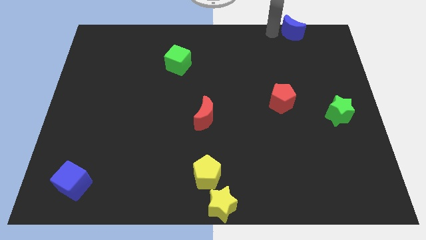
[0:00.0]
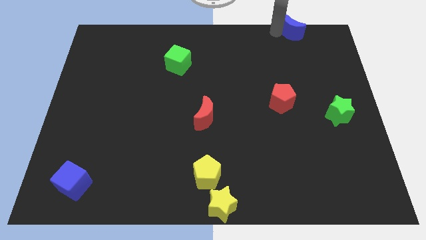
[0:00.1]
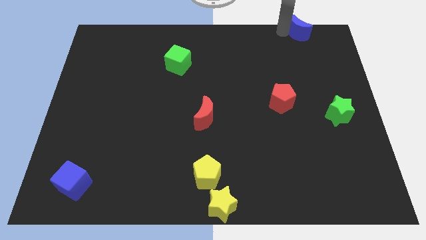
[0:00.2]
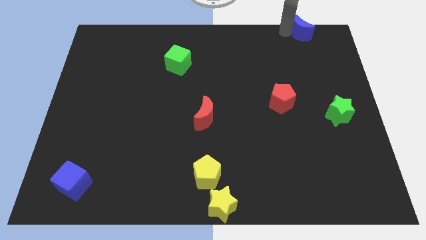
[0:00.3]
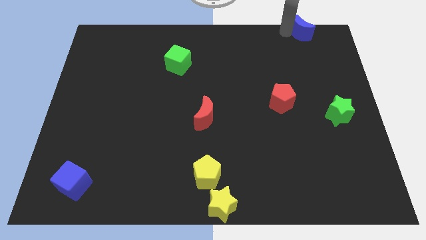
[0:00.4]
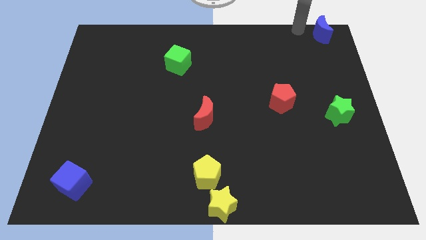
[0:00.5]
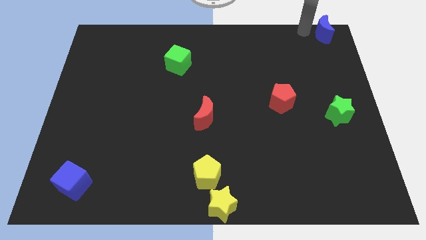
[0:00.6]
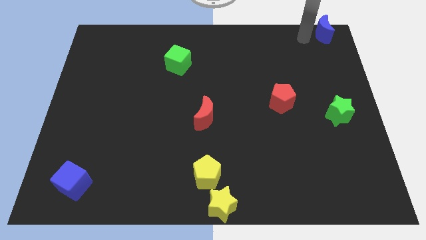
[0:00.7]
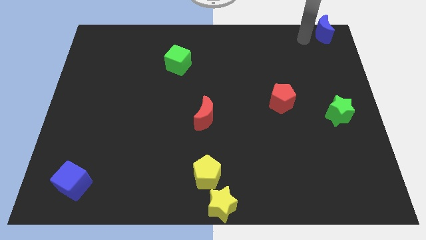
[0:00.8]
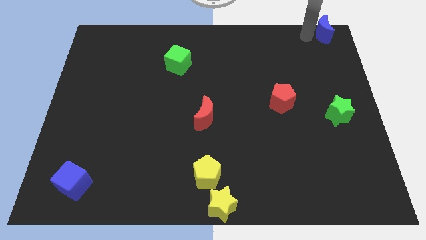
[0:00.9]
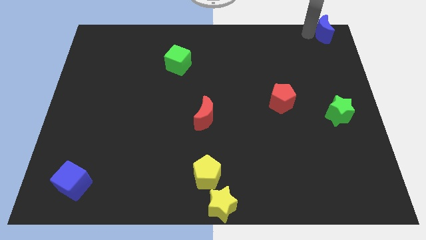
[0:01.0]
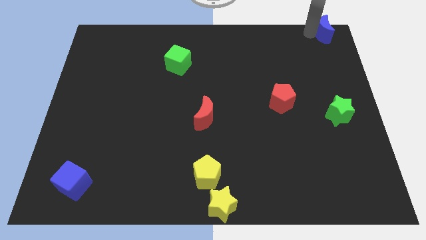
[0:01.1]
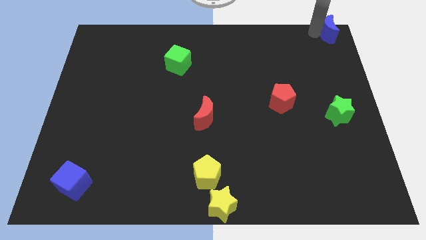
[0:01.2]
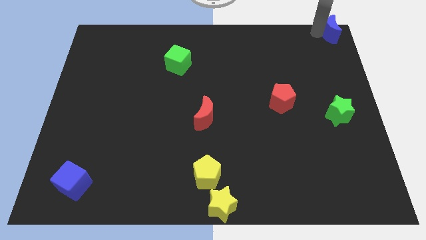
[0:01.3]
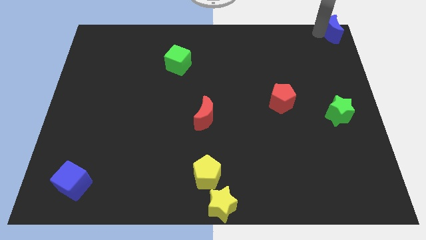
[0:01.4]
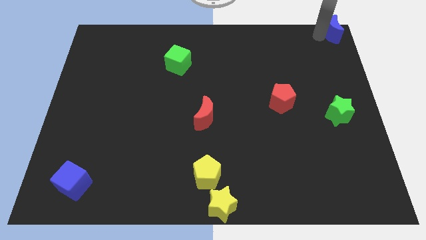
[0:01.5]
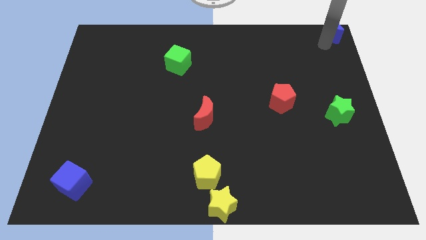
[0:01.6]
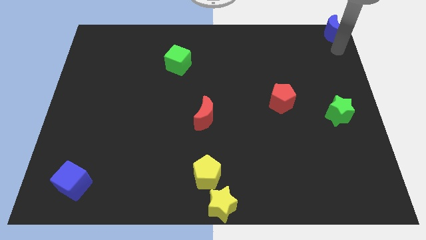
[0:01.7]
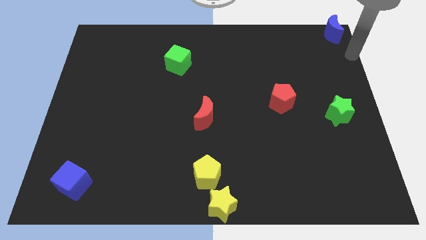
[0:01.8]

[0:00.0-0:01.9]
place the blue crescent at the top right corner of the board

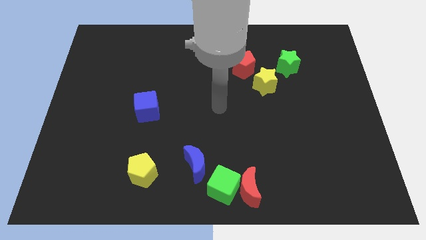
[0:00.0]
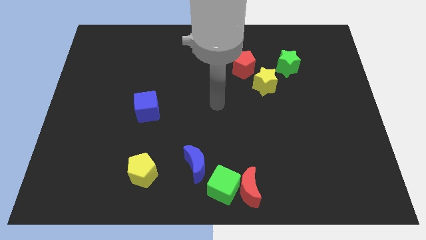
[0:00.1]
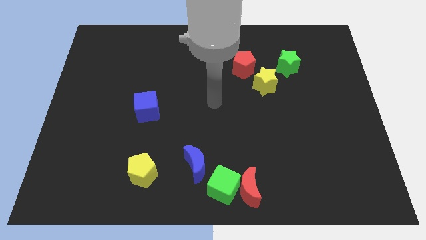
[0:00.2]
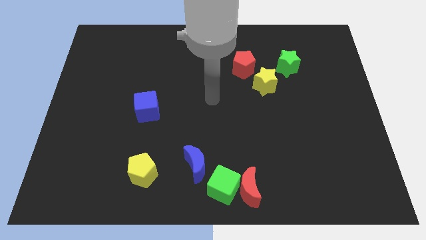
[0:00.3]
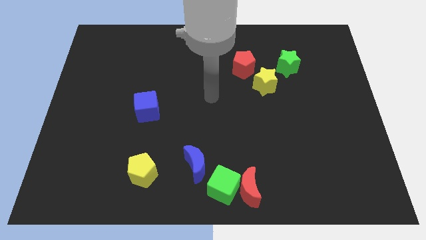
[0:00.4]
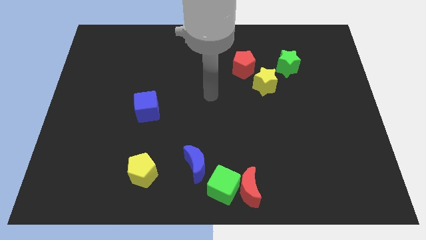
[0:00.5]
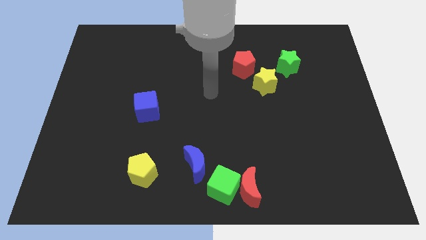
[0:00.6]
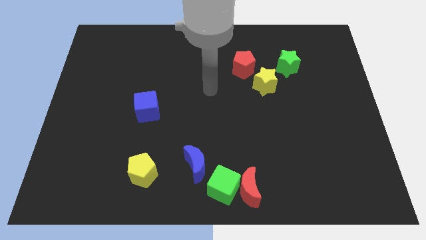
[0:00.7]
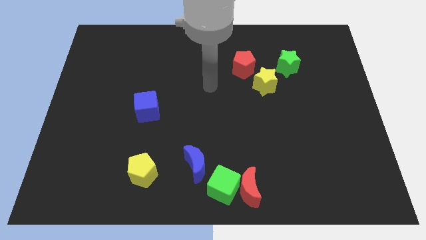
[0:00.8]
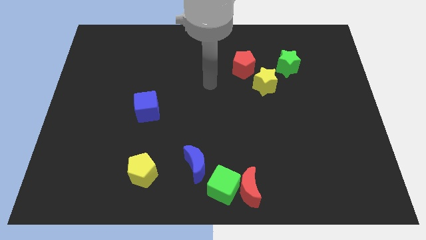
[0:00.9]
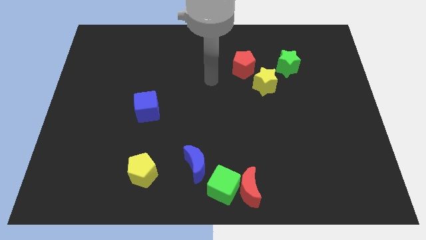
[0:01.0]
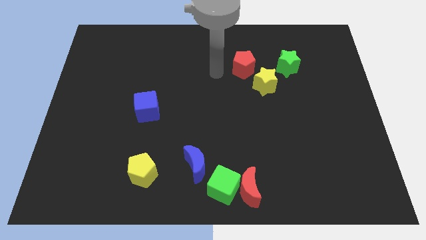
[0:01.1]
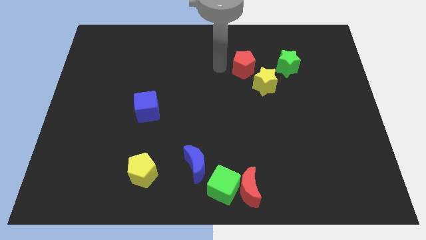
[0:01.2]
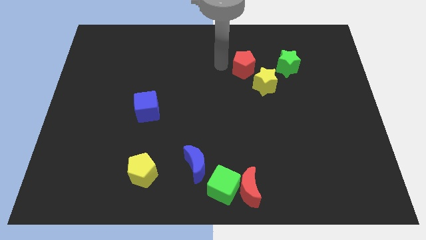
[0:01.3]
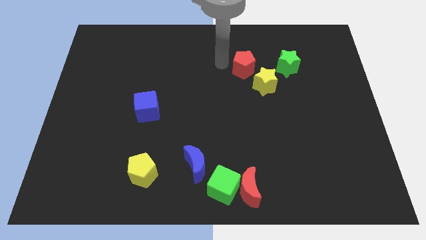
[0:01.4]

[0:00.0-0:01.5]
point your hand at the left side of the red pentagon

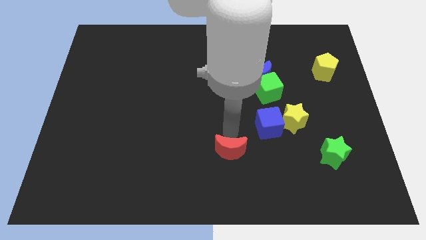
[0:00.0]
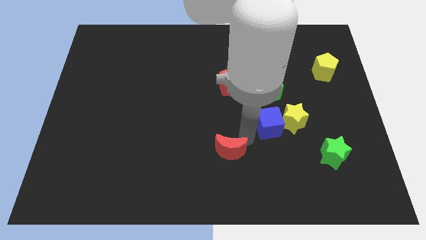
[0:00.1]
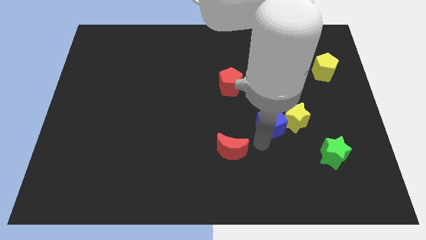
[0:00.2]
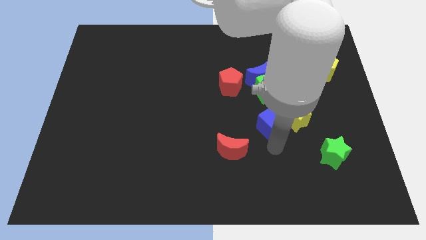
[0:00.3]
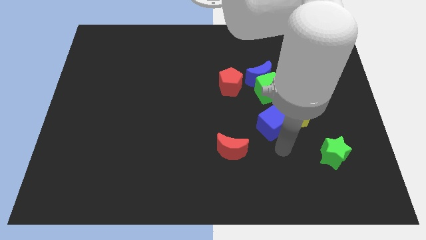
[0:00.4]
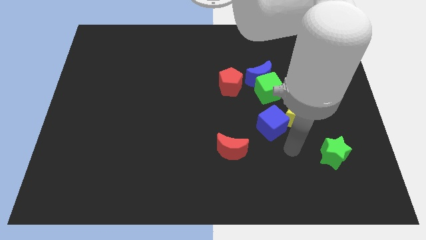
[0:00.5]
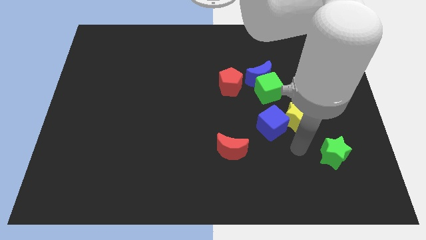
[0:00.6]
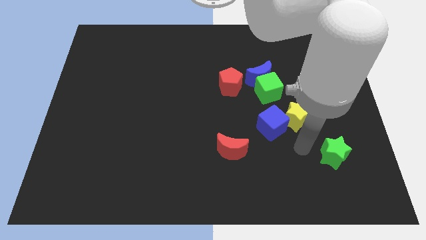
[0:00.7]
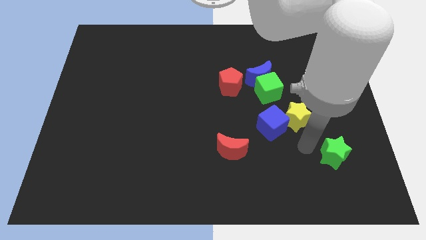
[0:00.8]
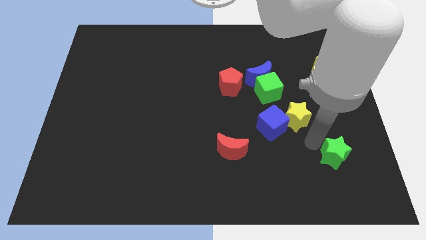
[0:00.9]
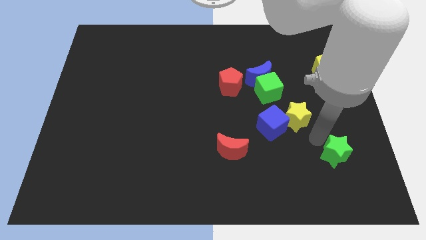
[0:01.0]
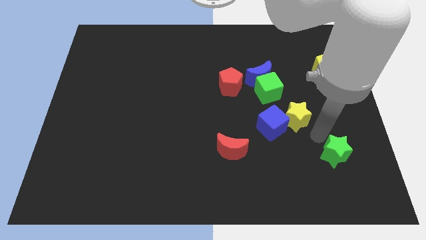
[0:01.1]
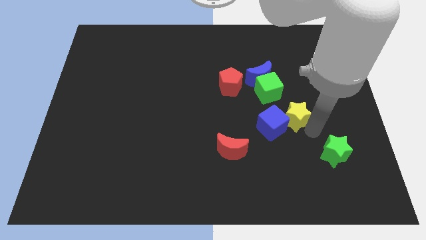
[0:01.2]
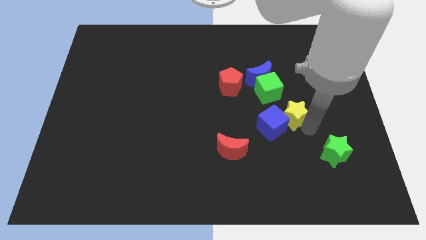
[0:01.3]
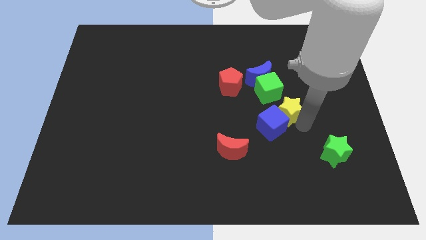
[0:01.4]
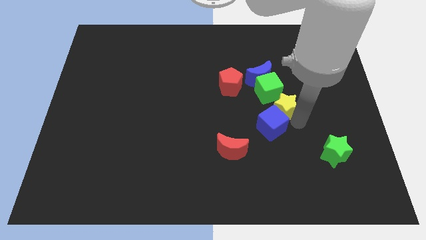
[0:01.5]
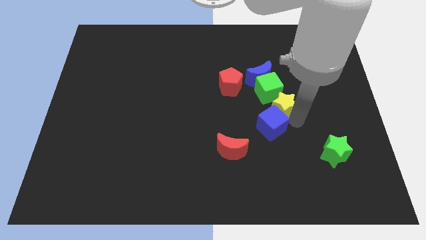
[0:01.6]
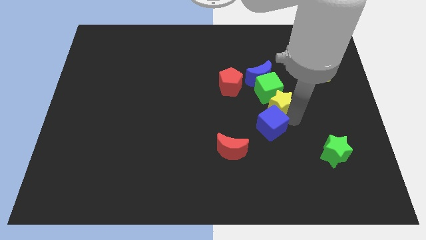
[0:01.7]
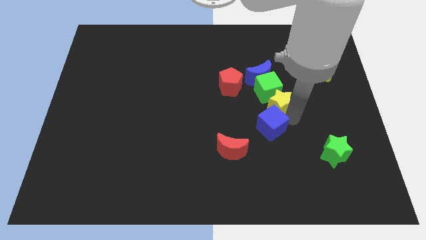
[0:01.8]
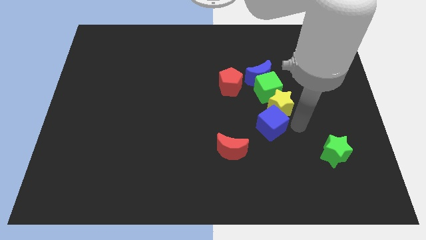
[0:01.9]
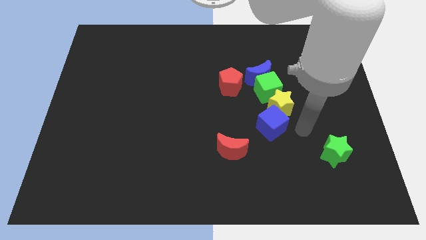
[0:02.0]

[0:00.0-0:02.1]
push the yellow star into the green cube

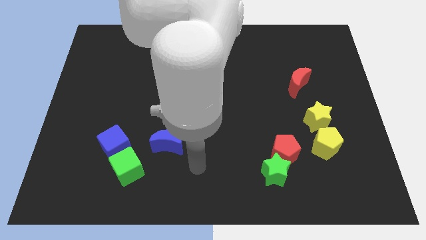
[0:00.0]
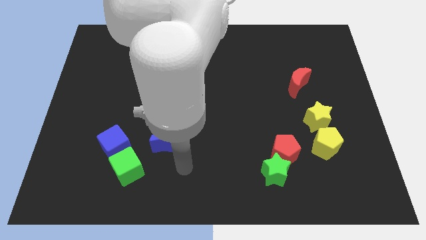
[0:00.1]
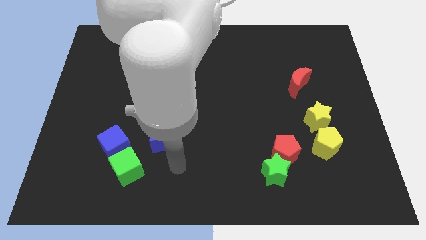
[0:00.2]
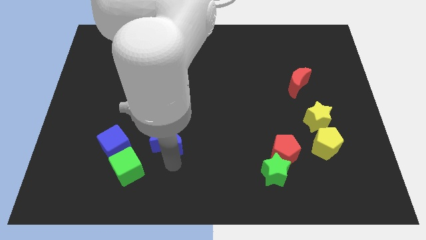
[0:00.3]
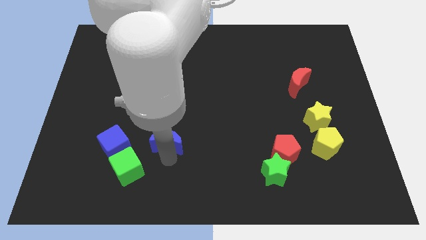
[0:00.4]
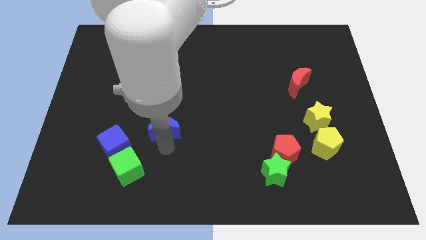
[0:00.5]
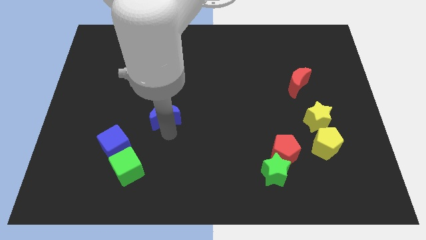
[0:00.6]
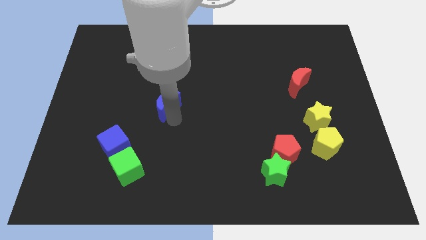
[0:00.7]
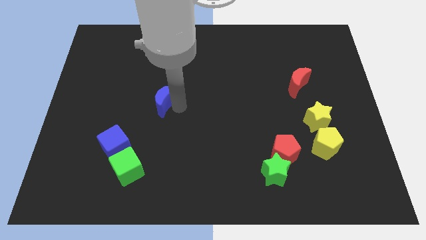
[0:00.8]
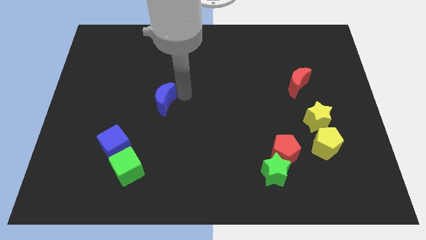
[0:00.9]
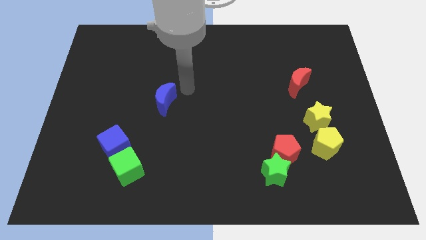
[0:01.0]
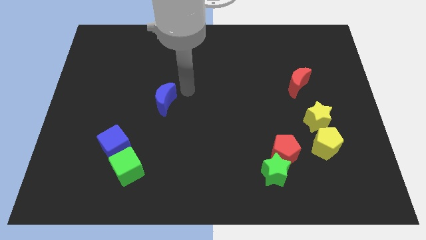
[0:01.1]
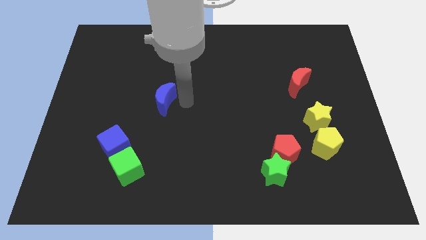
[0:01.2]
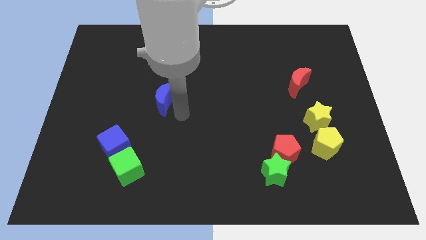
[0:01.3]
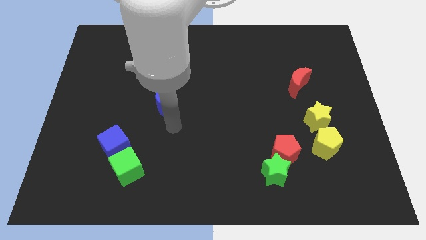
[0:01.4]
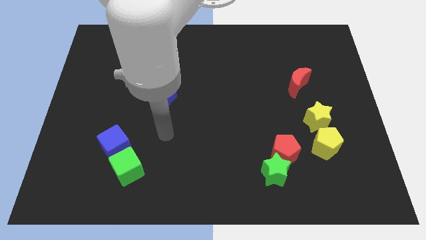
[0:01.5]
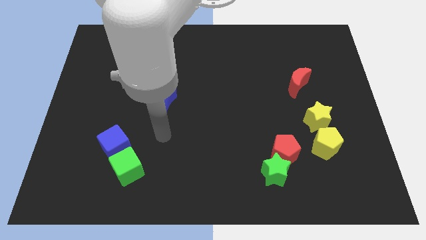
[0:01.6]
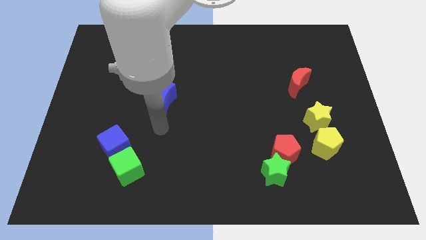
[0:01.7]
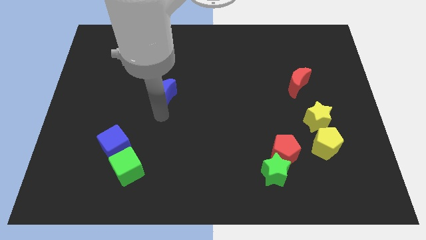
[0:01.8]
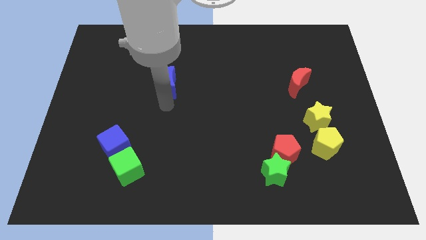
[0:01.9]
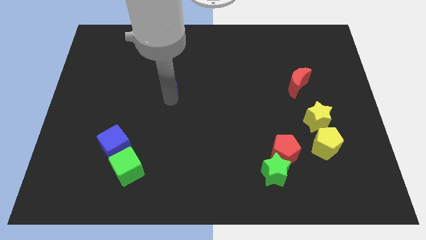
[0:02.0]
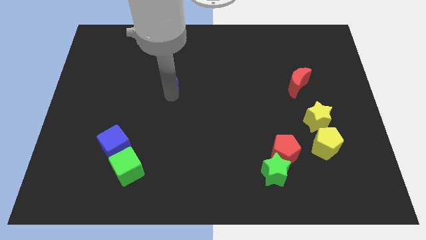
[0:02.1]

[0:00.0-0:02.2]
move the blue crescent slightly upwards

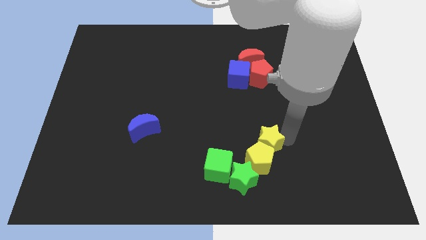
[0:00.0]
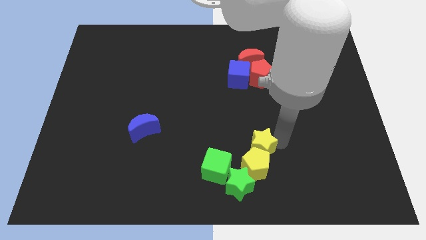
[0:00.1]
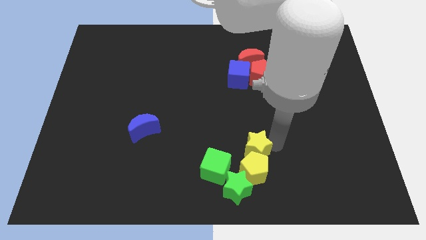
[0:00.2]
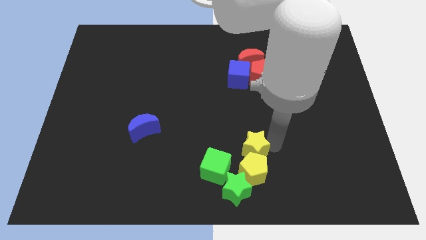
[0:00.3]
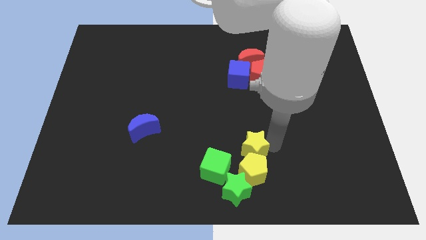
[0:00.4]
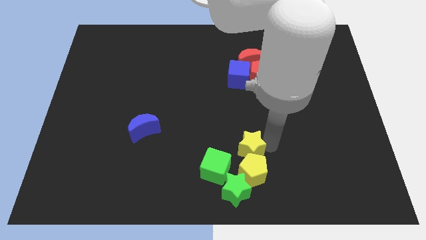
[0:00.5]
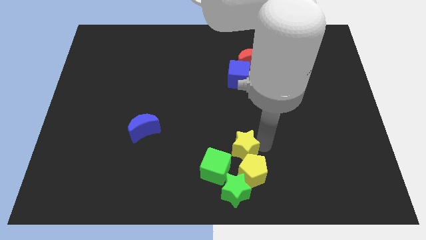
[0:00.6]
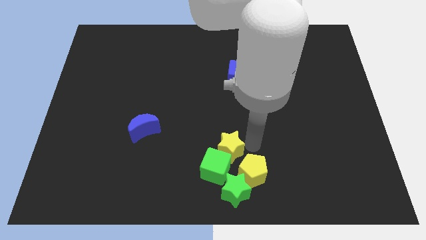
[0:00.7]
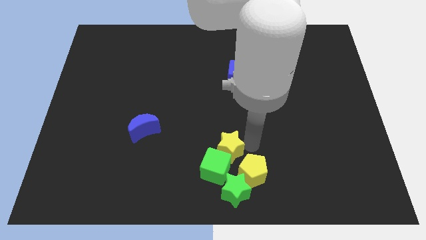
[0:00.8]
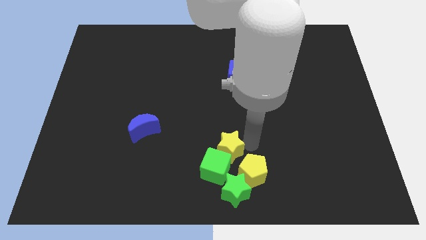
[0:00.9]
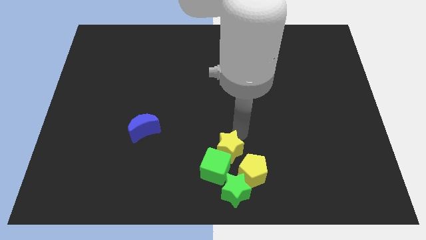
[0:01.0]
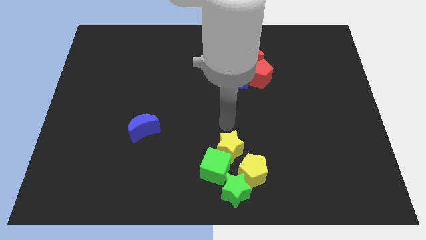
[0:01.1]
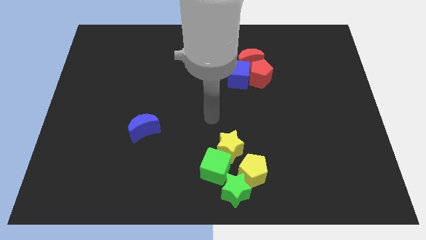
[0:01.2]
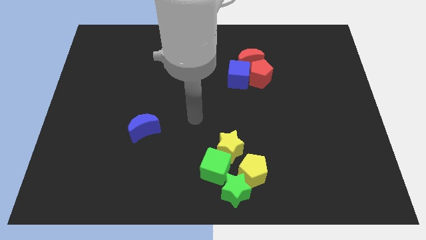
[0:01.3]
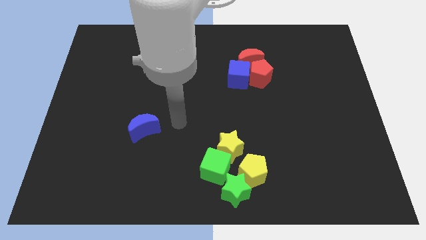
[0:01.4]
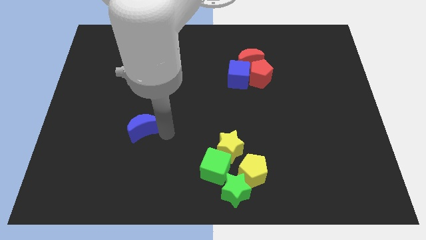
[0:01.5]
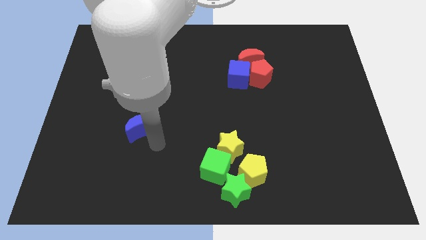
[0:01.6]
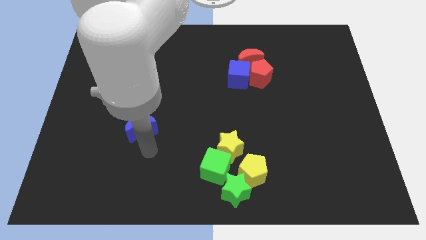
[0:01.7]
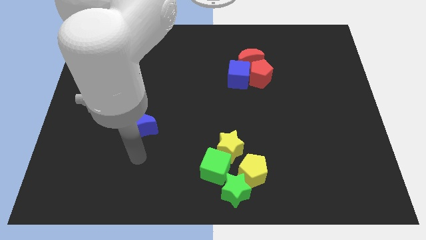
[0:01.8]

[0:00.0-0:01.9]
move the yellow star into group of blocks
